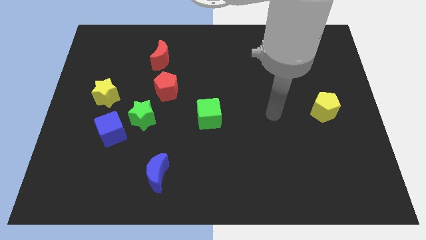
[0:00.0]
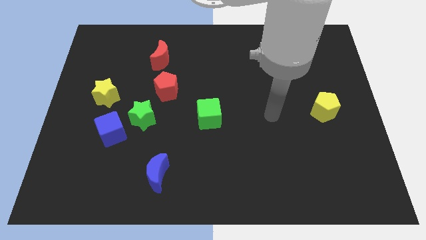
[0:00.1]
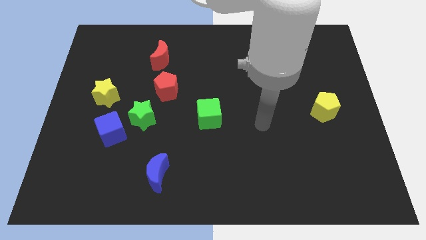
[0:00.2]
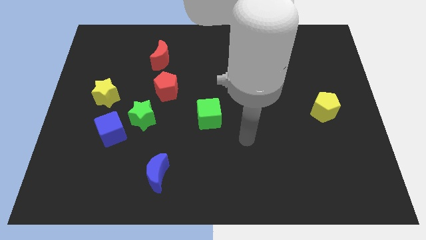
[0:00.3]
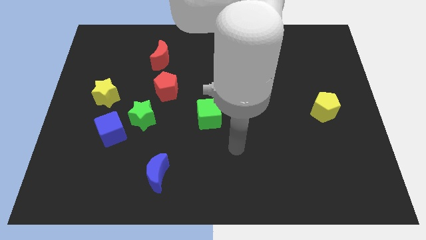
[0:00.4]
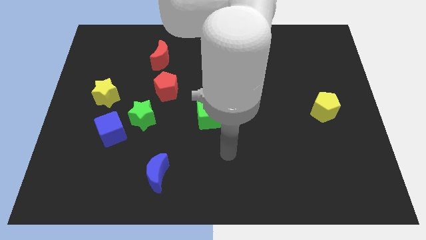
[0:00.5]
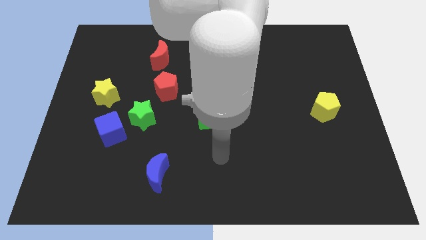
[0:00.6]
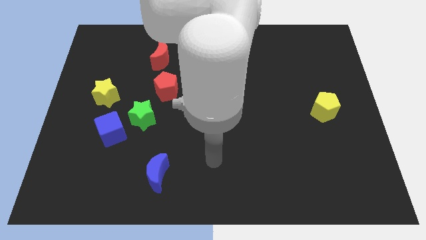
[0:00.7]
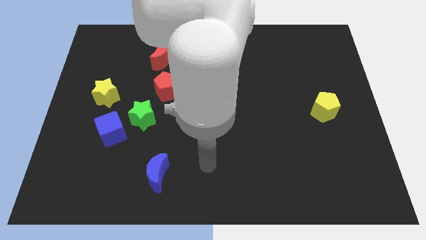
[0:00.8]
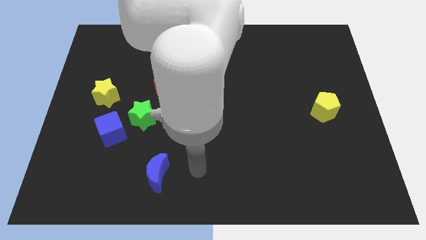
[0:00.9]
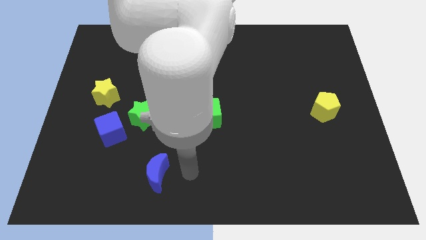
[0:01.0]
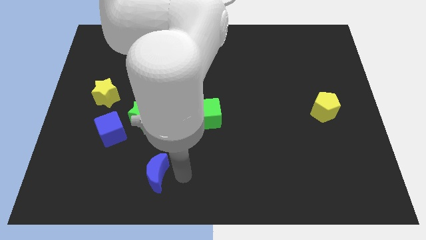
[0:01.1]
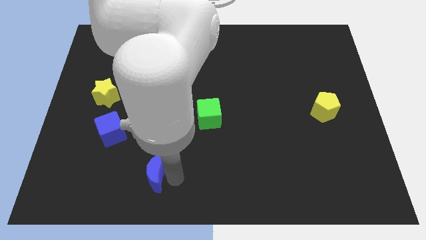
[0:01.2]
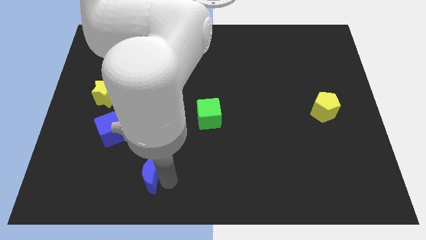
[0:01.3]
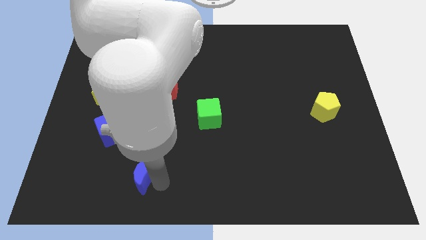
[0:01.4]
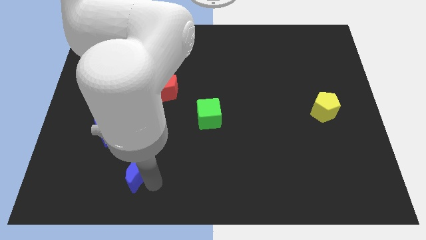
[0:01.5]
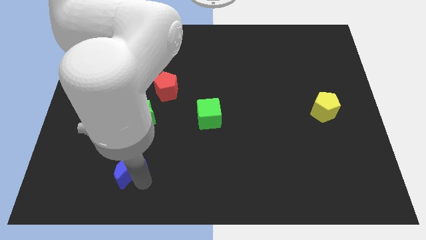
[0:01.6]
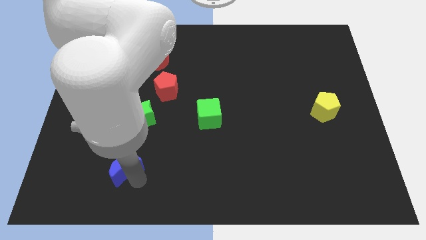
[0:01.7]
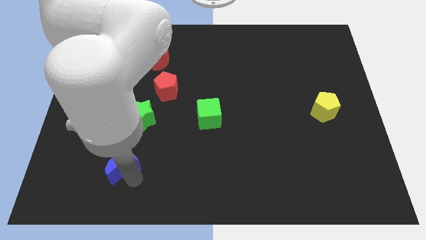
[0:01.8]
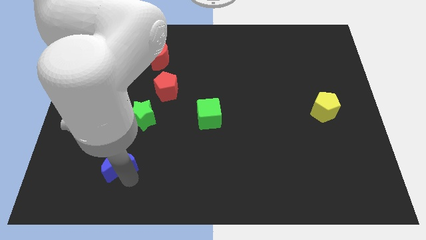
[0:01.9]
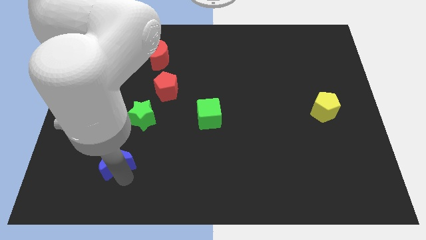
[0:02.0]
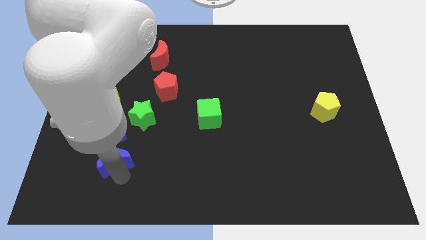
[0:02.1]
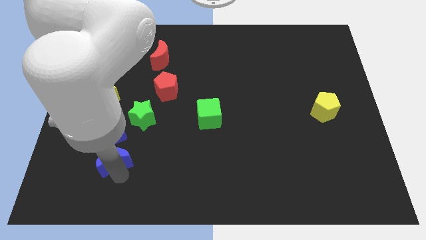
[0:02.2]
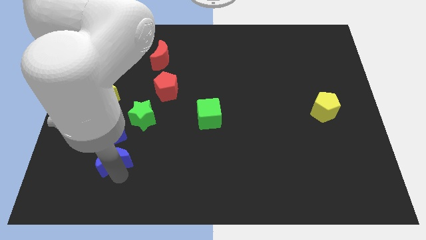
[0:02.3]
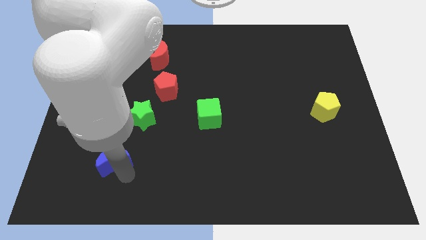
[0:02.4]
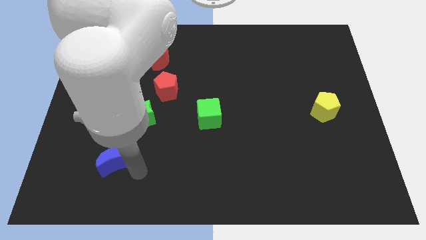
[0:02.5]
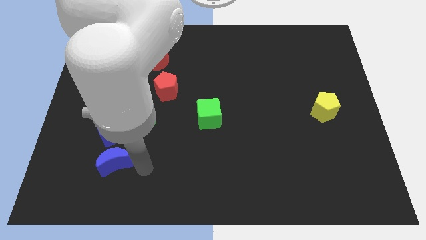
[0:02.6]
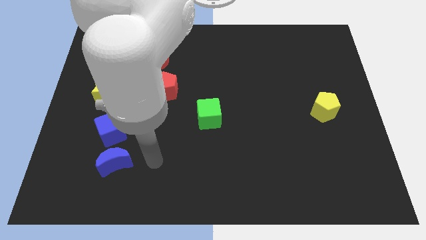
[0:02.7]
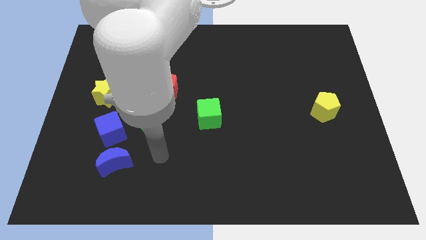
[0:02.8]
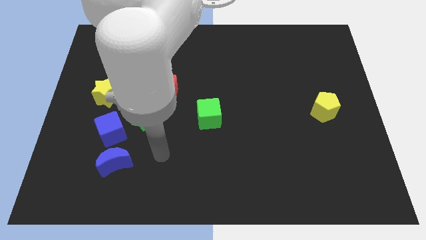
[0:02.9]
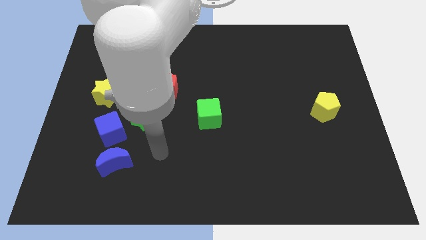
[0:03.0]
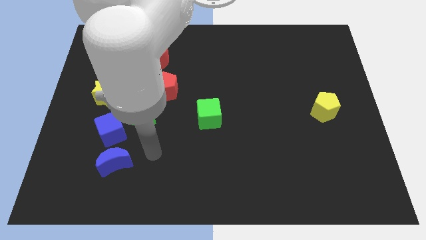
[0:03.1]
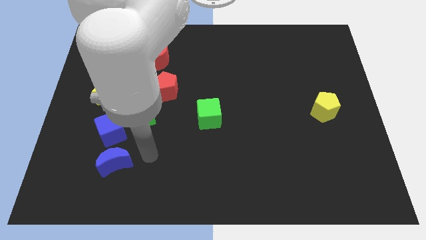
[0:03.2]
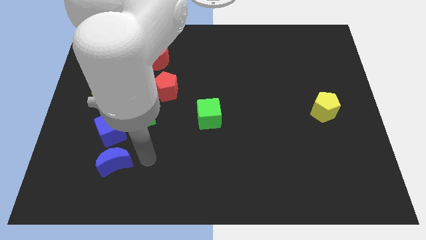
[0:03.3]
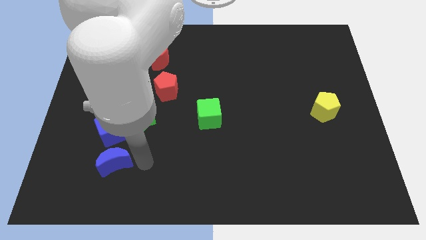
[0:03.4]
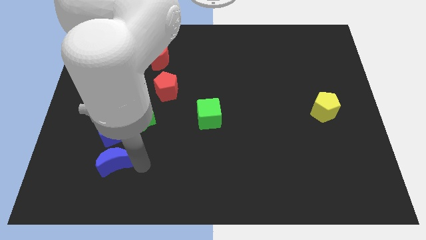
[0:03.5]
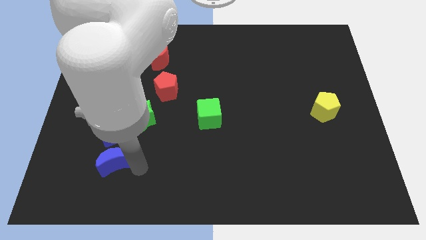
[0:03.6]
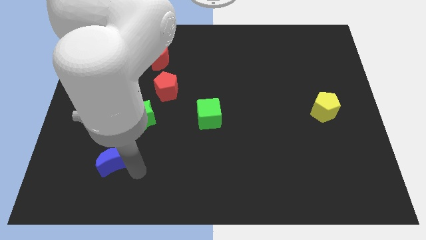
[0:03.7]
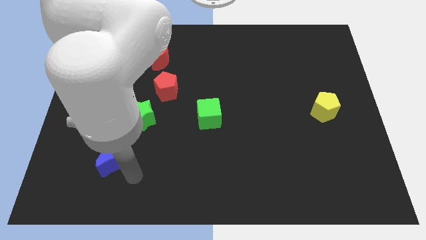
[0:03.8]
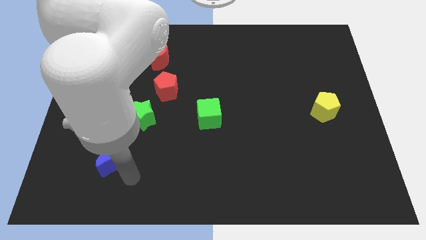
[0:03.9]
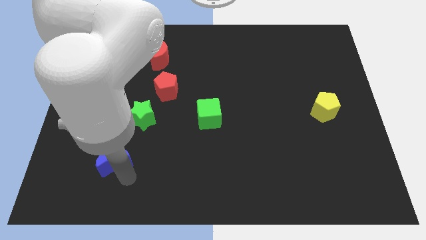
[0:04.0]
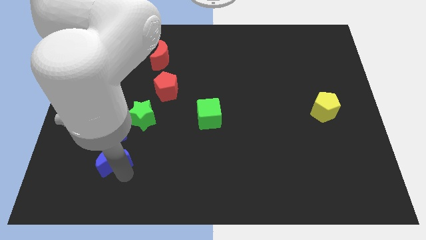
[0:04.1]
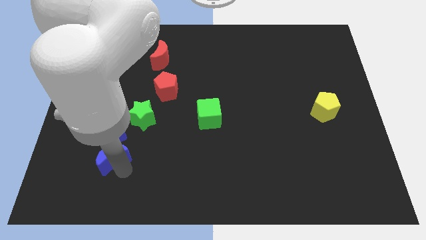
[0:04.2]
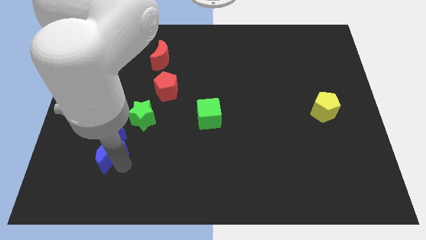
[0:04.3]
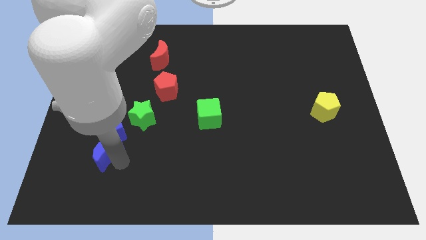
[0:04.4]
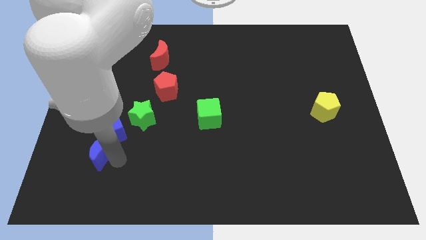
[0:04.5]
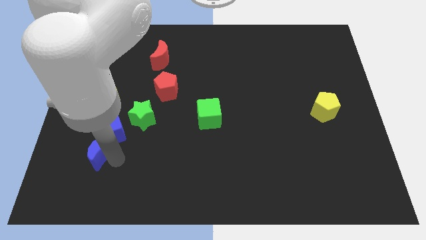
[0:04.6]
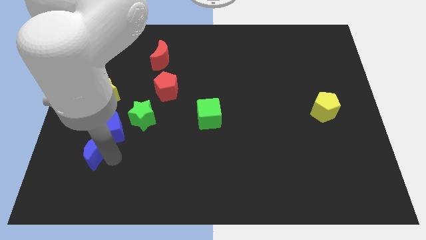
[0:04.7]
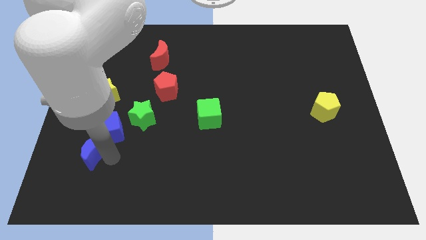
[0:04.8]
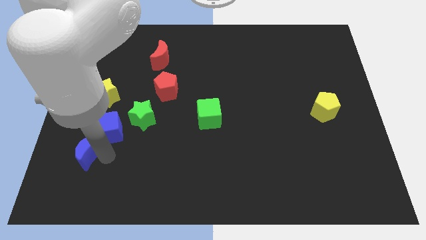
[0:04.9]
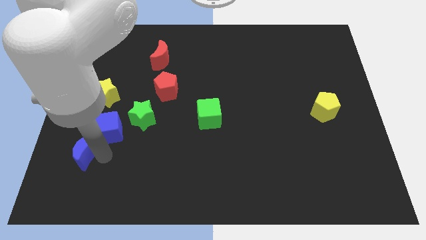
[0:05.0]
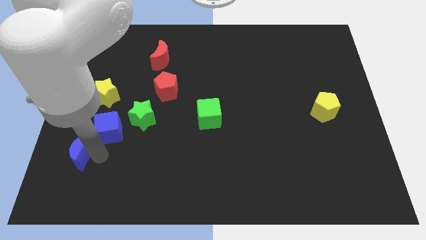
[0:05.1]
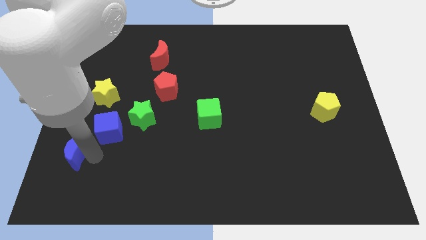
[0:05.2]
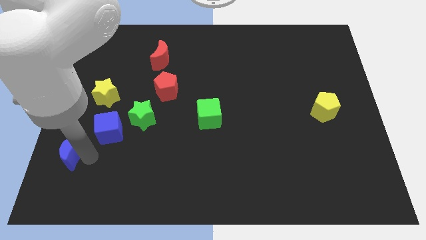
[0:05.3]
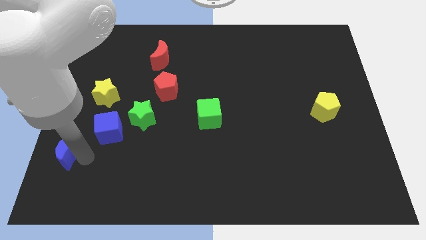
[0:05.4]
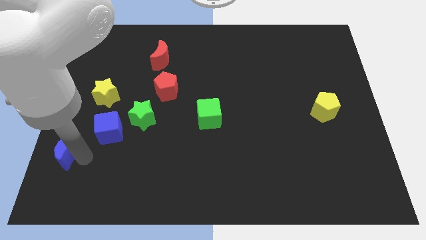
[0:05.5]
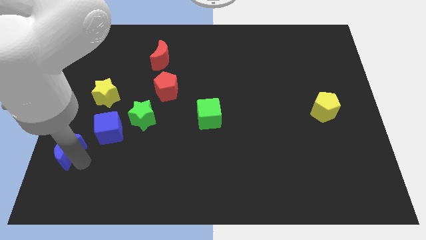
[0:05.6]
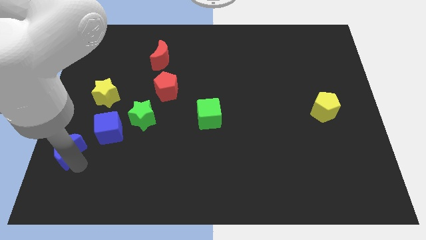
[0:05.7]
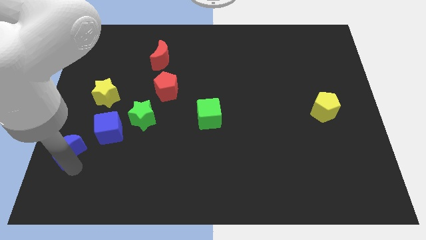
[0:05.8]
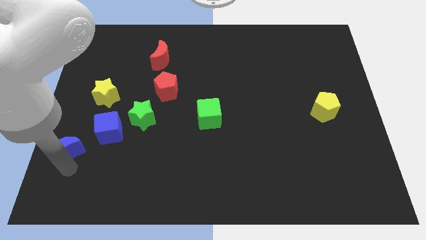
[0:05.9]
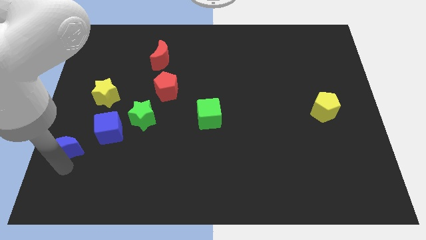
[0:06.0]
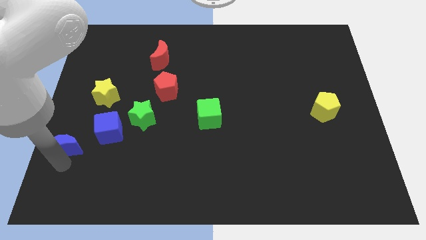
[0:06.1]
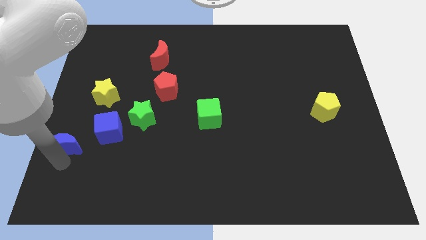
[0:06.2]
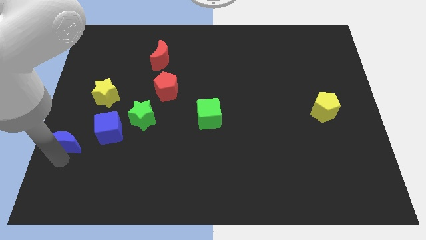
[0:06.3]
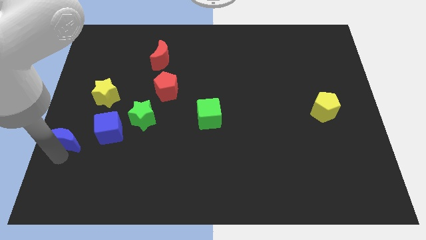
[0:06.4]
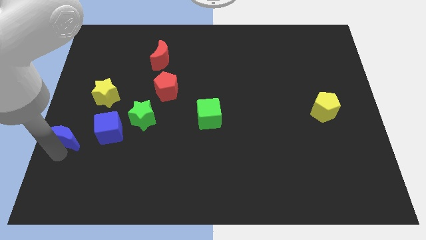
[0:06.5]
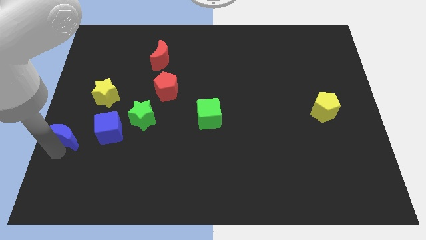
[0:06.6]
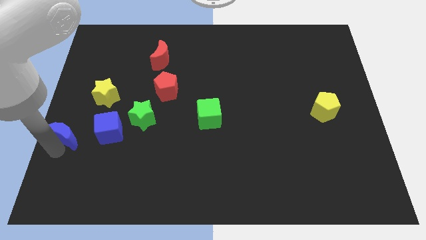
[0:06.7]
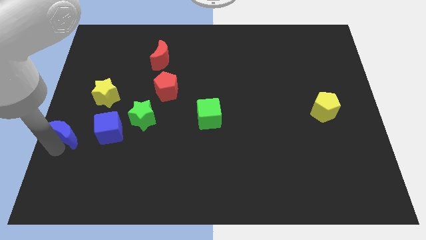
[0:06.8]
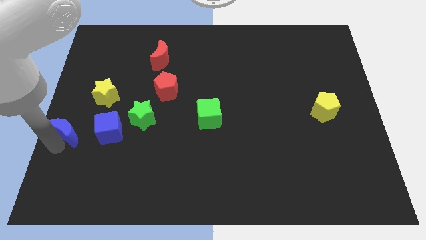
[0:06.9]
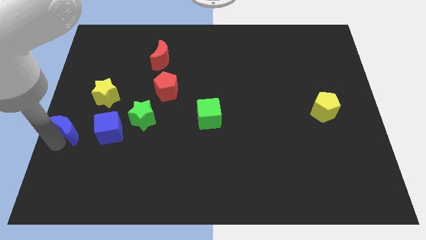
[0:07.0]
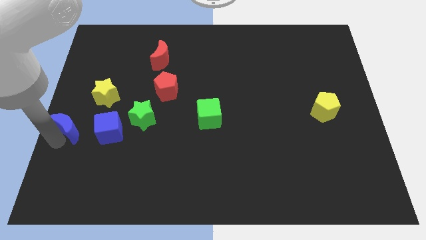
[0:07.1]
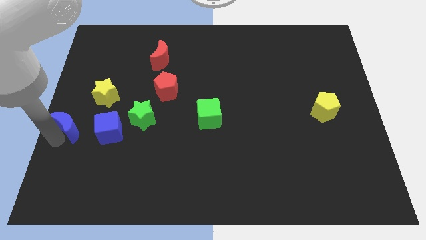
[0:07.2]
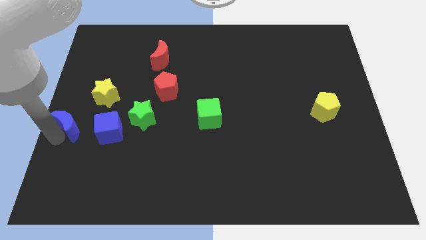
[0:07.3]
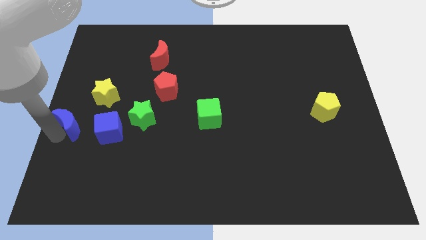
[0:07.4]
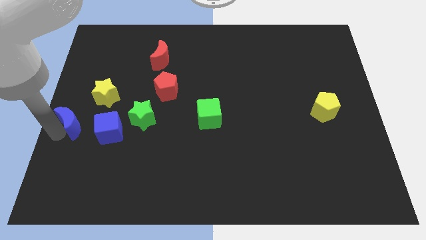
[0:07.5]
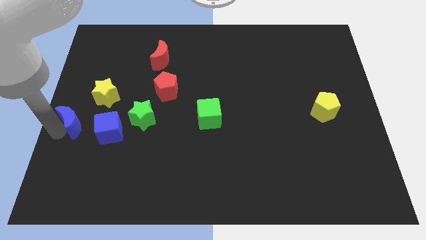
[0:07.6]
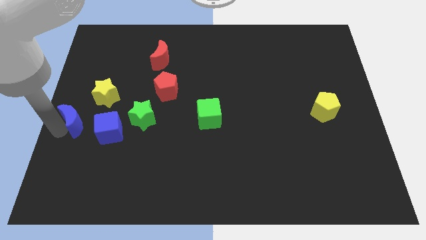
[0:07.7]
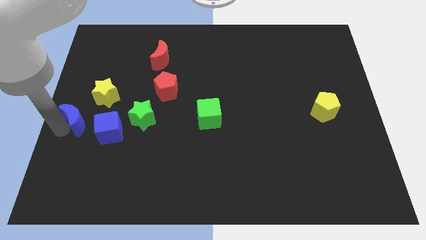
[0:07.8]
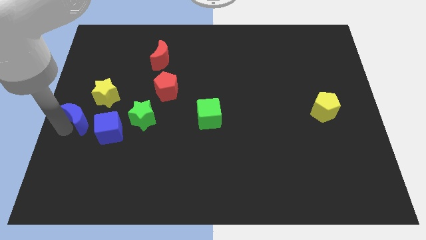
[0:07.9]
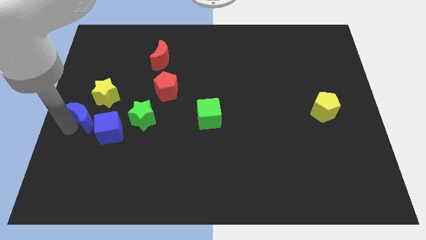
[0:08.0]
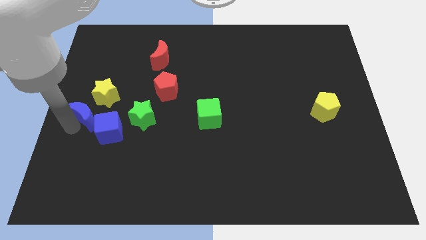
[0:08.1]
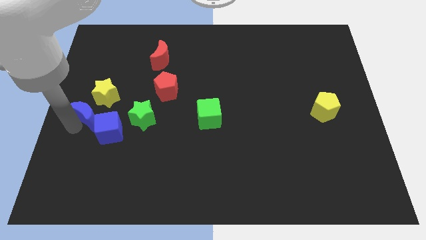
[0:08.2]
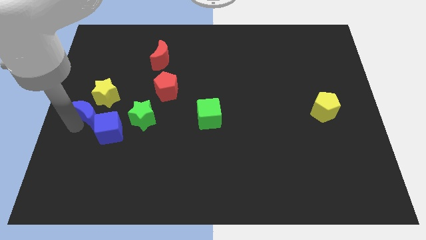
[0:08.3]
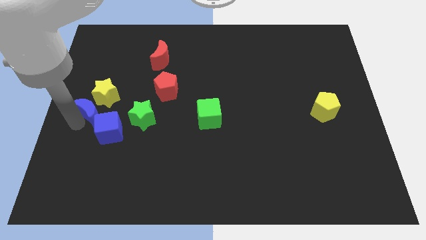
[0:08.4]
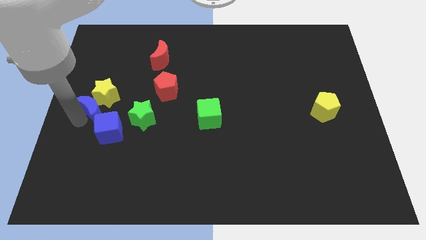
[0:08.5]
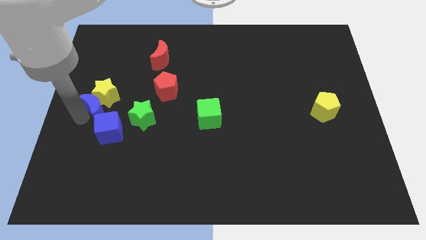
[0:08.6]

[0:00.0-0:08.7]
put the blue moon next to the yellow star
